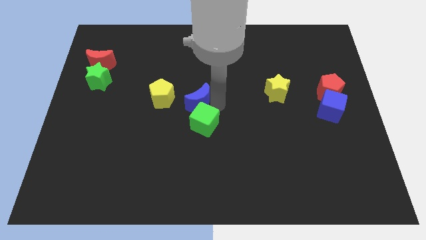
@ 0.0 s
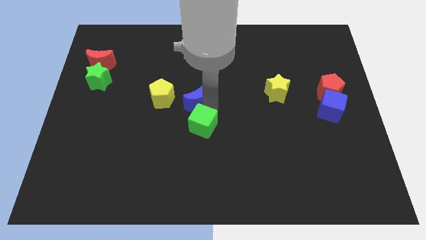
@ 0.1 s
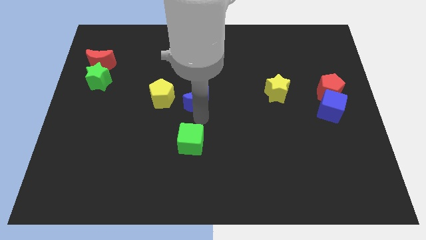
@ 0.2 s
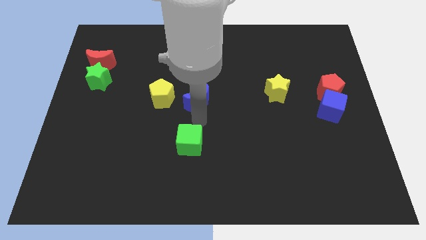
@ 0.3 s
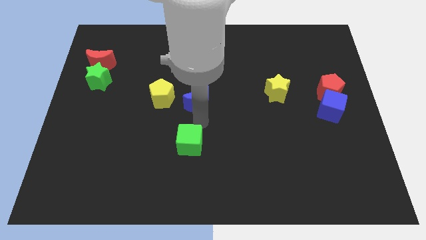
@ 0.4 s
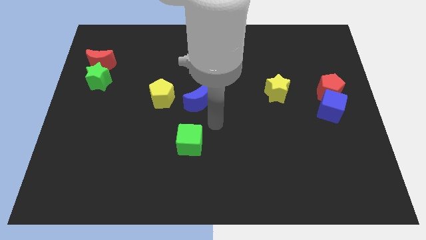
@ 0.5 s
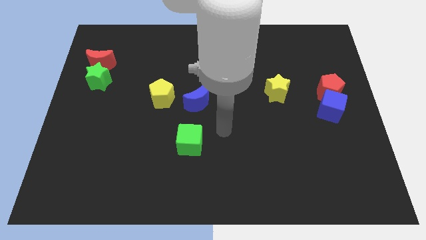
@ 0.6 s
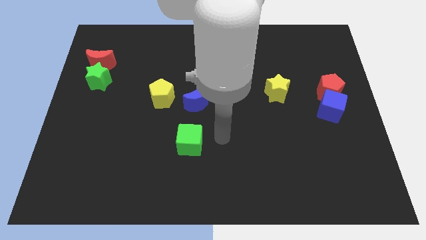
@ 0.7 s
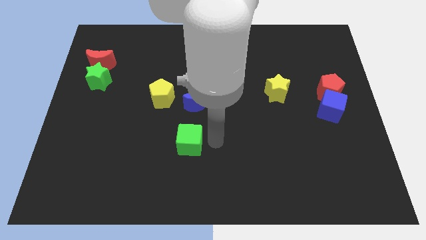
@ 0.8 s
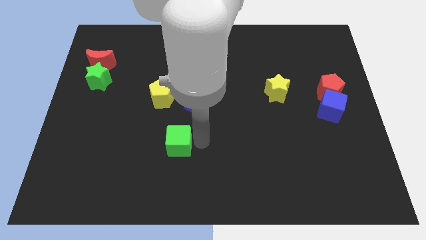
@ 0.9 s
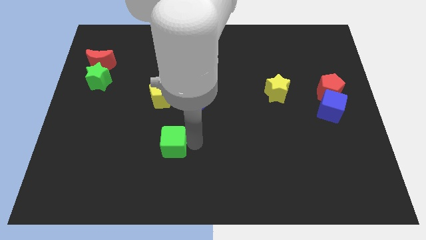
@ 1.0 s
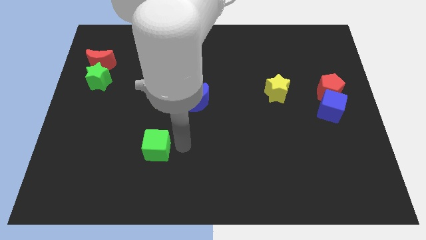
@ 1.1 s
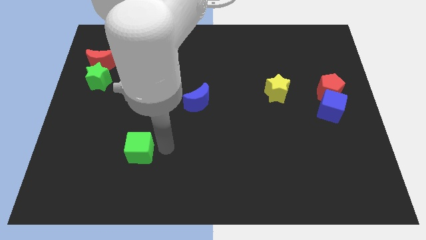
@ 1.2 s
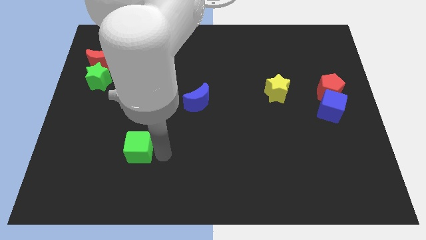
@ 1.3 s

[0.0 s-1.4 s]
push the green cube to the left of the board

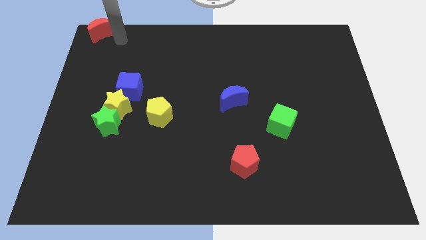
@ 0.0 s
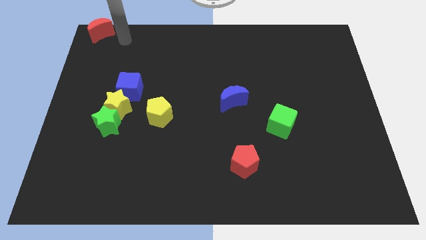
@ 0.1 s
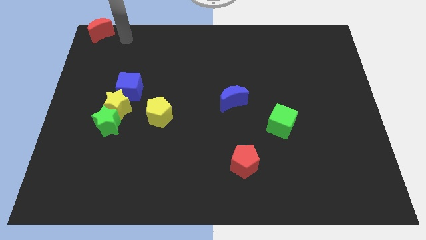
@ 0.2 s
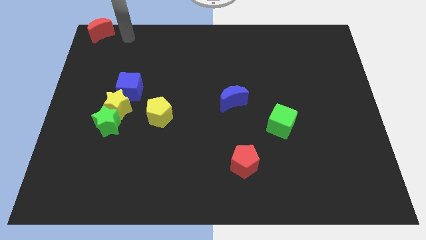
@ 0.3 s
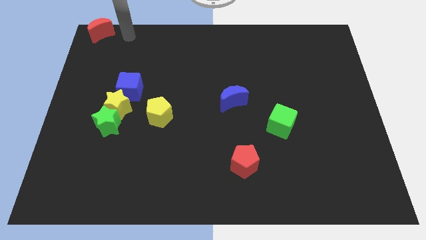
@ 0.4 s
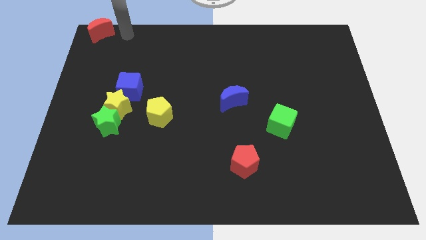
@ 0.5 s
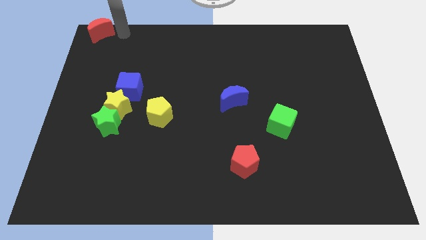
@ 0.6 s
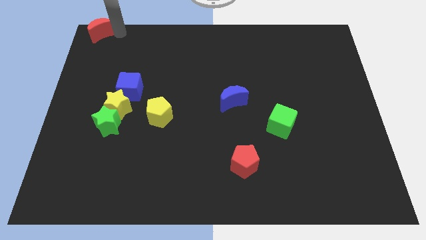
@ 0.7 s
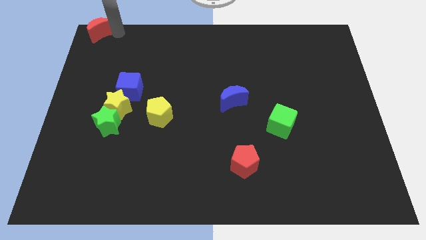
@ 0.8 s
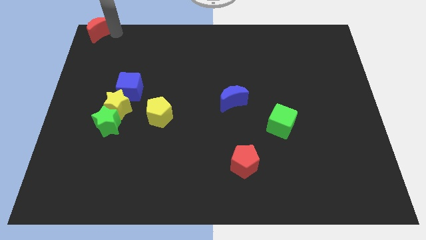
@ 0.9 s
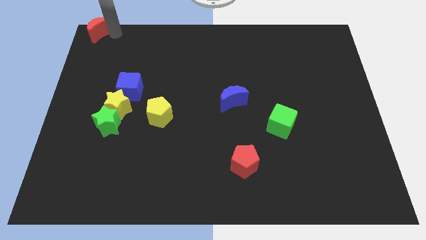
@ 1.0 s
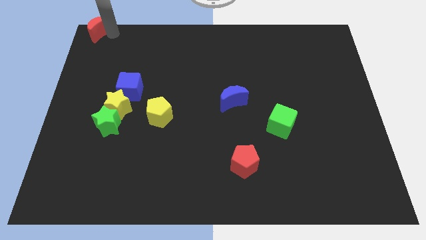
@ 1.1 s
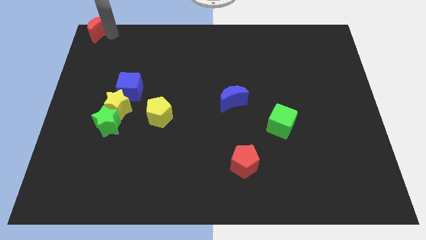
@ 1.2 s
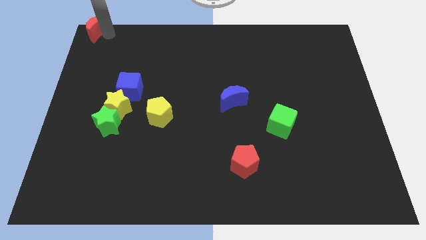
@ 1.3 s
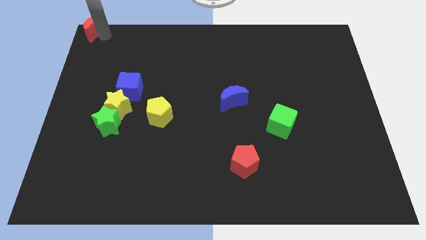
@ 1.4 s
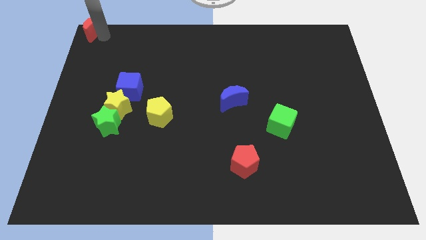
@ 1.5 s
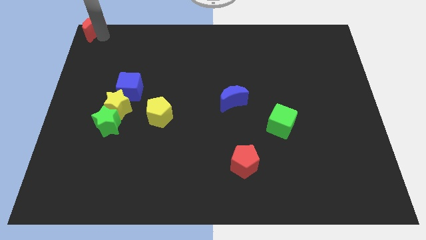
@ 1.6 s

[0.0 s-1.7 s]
place the red crescent at the top left corner of the board

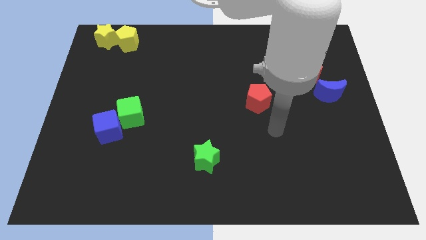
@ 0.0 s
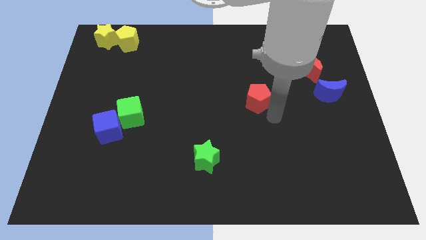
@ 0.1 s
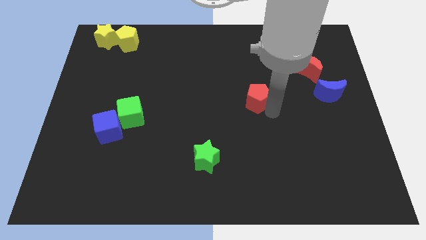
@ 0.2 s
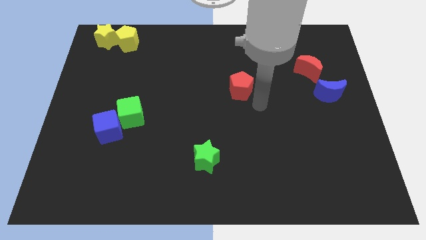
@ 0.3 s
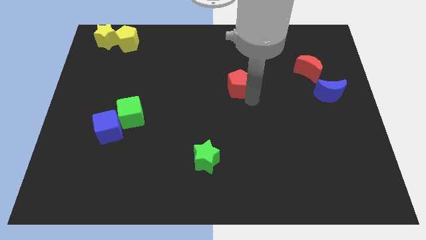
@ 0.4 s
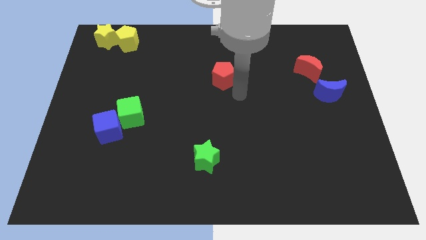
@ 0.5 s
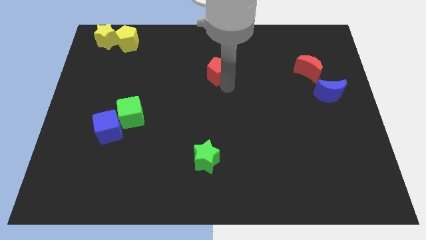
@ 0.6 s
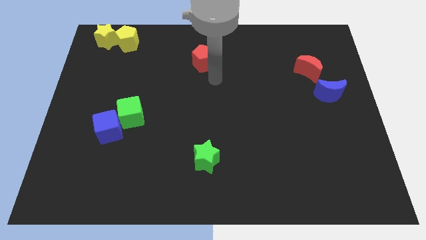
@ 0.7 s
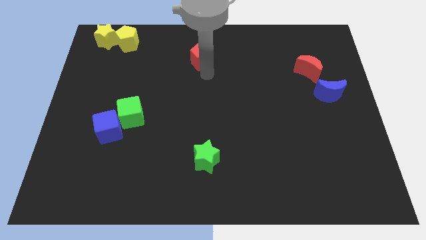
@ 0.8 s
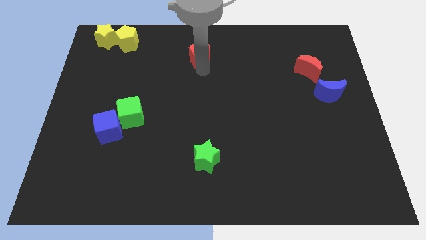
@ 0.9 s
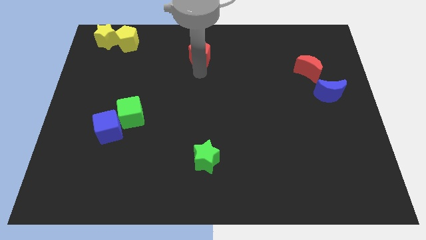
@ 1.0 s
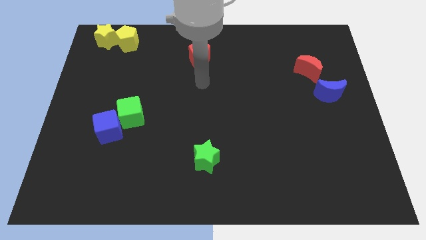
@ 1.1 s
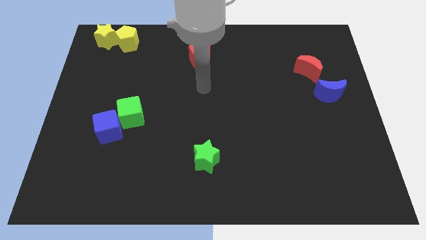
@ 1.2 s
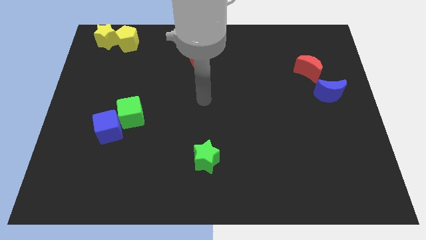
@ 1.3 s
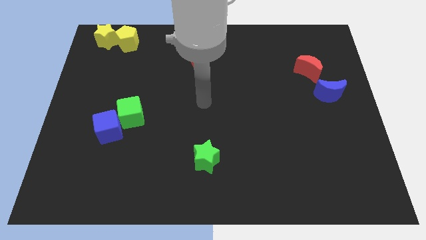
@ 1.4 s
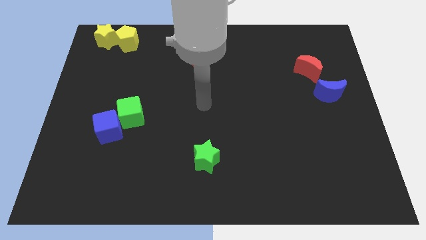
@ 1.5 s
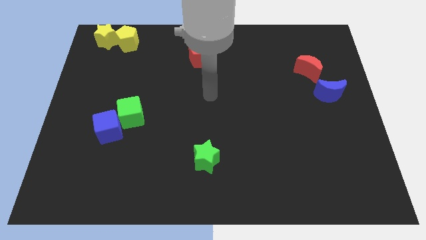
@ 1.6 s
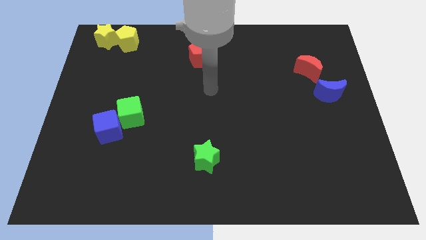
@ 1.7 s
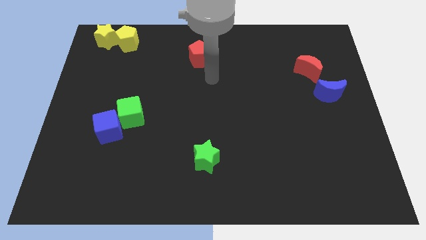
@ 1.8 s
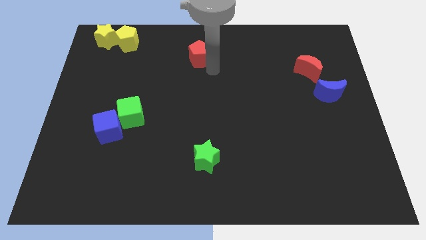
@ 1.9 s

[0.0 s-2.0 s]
push the red pentagon to the top center of the board

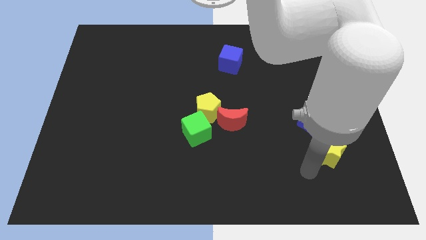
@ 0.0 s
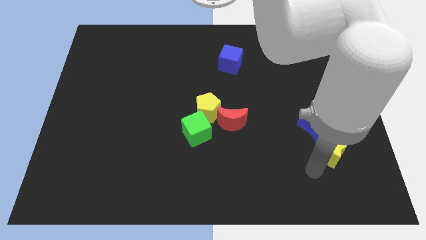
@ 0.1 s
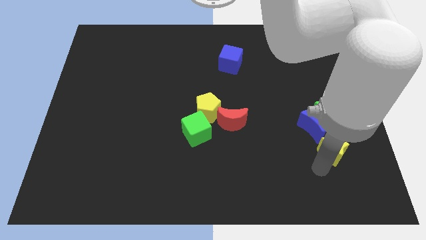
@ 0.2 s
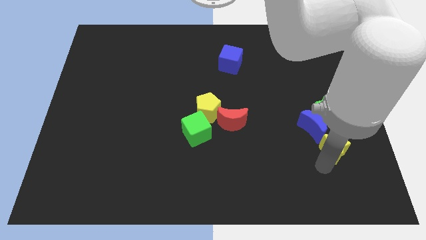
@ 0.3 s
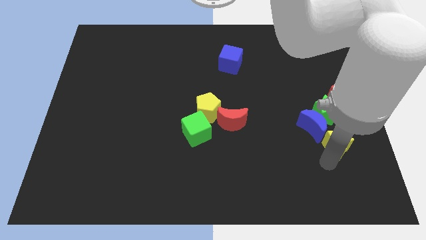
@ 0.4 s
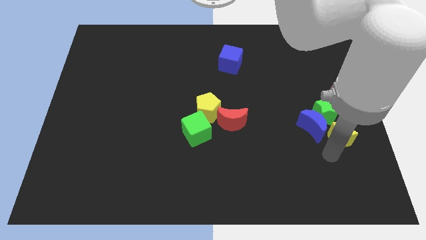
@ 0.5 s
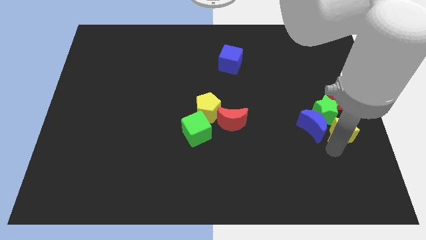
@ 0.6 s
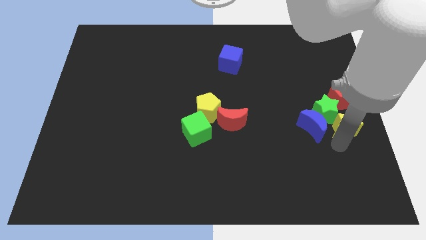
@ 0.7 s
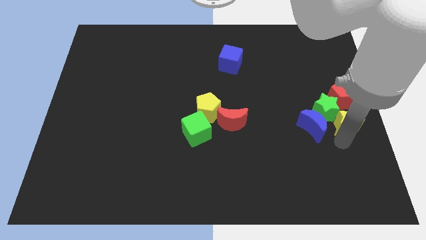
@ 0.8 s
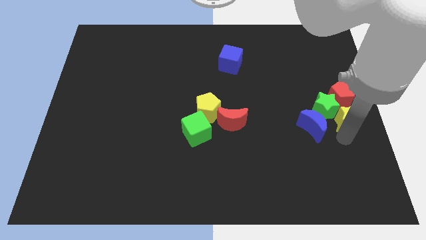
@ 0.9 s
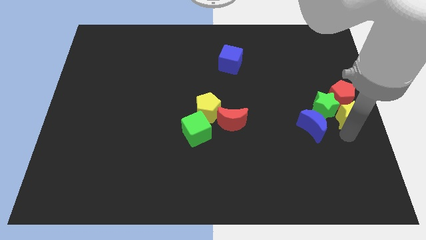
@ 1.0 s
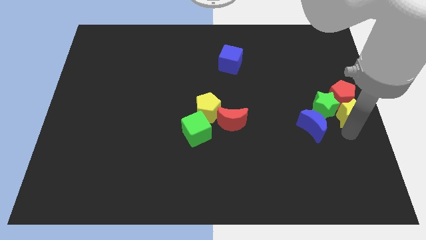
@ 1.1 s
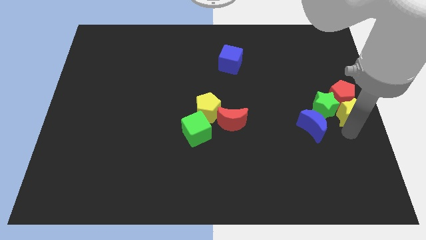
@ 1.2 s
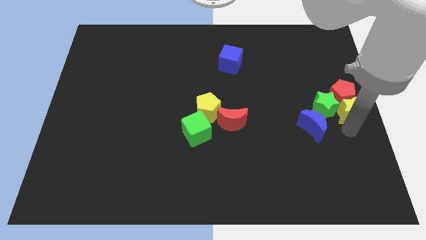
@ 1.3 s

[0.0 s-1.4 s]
place the yellow star below the red pentagon

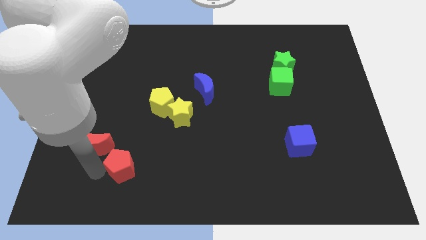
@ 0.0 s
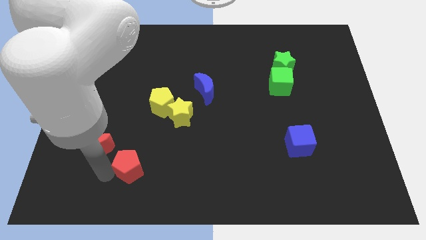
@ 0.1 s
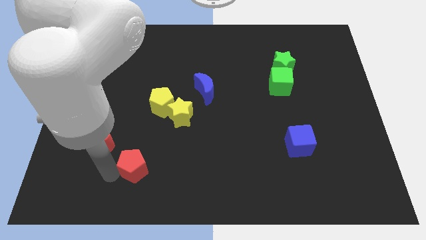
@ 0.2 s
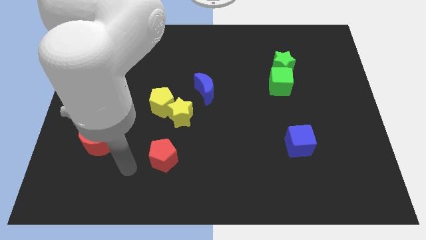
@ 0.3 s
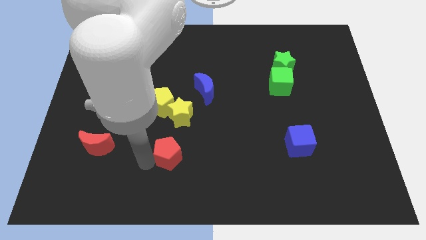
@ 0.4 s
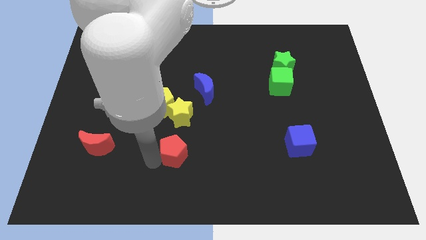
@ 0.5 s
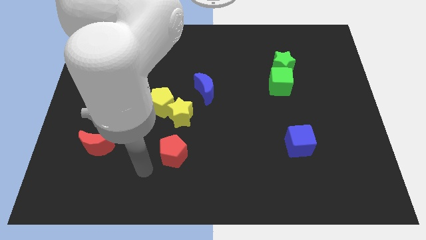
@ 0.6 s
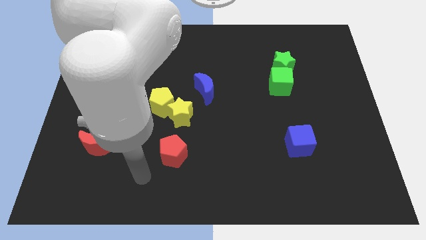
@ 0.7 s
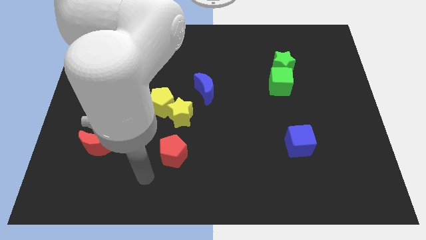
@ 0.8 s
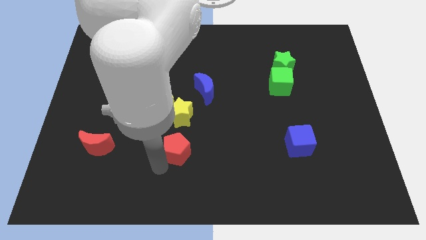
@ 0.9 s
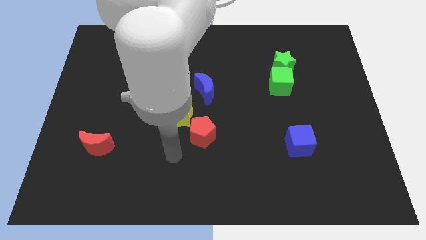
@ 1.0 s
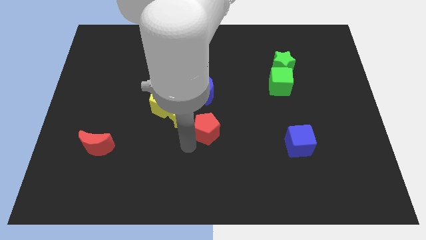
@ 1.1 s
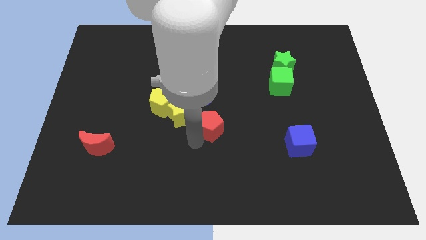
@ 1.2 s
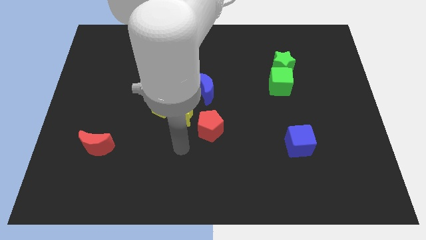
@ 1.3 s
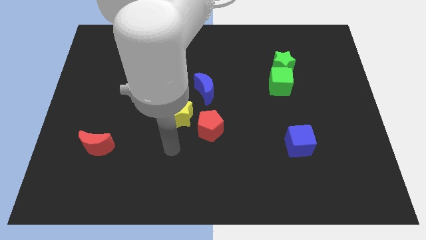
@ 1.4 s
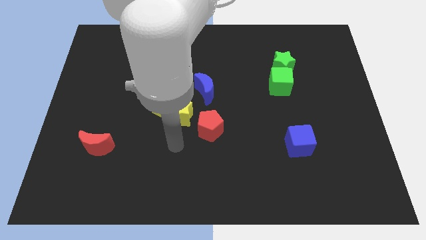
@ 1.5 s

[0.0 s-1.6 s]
put the red pentagon below the blue crescent

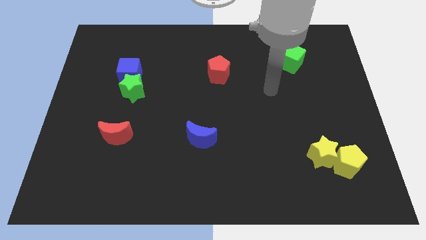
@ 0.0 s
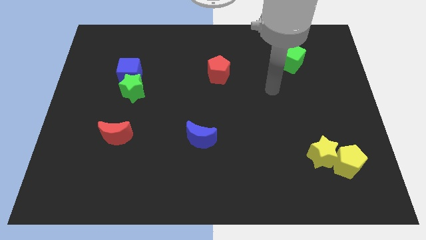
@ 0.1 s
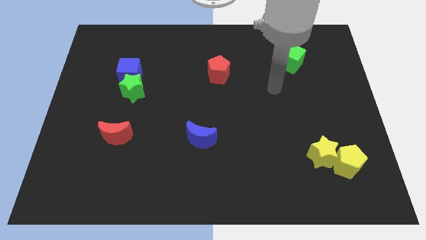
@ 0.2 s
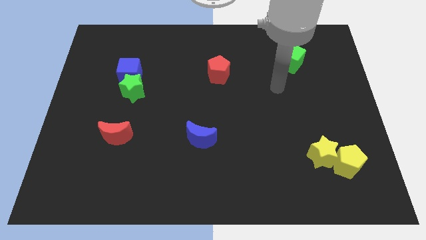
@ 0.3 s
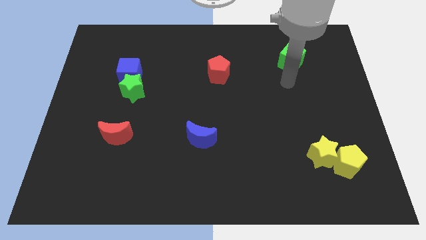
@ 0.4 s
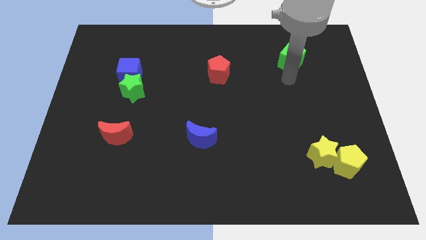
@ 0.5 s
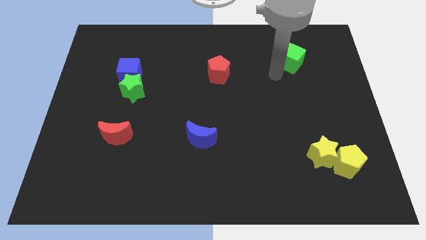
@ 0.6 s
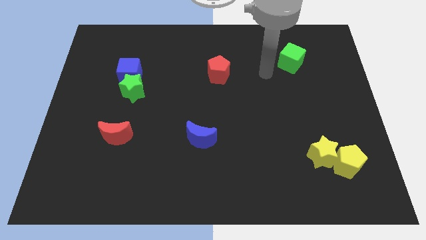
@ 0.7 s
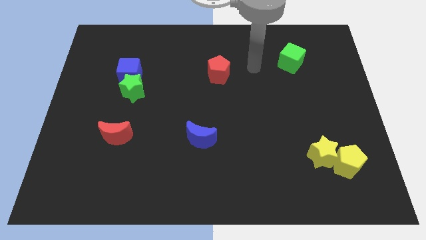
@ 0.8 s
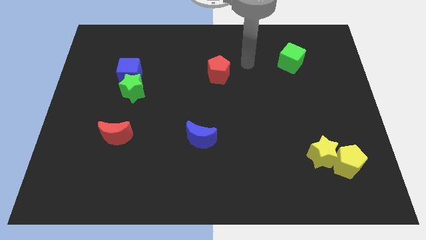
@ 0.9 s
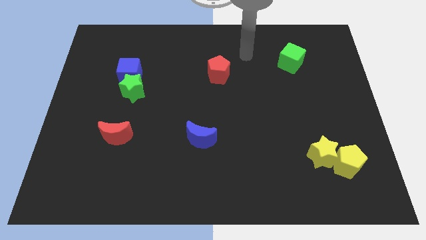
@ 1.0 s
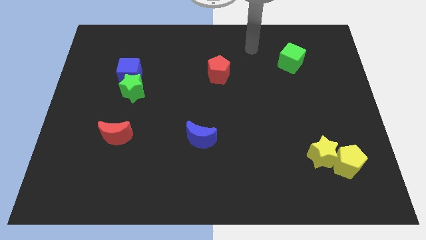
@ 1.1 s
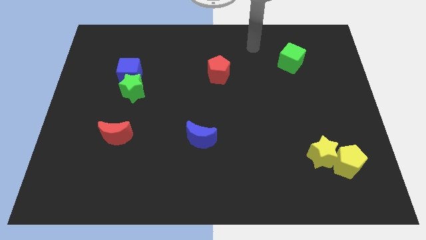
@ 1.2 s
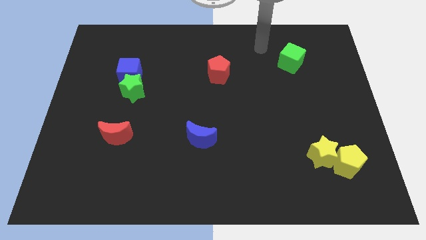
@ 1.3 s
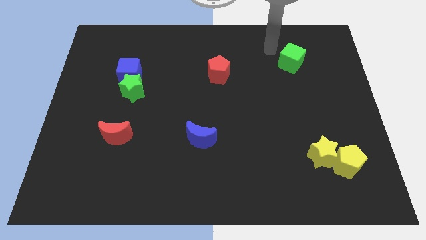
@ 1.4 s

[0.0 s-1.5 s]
point the arm to the top left of the green cube
